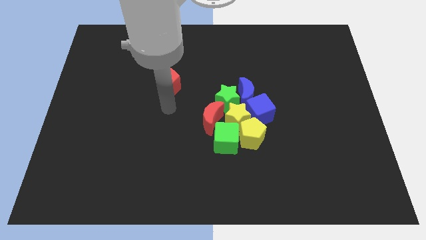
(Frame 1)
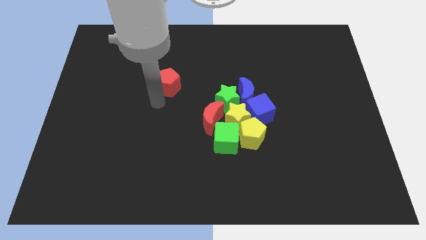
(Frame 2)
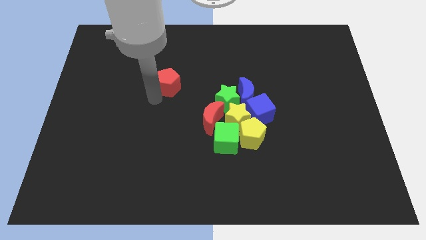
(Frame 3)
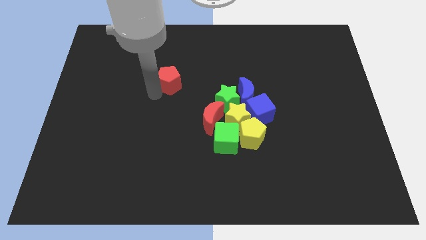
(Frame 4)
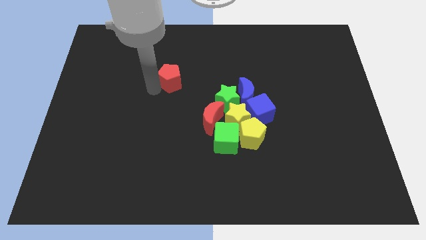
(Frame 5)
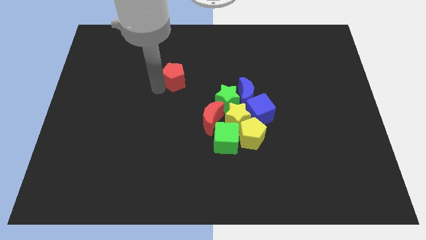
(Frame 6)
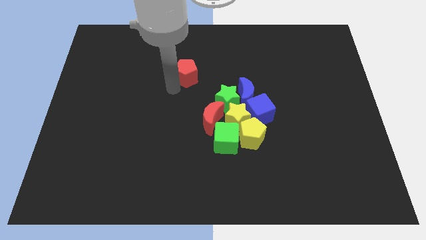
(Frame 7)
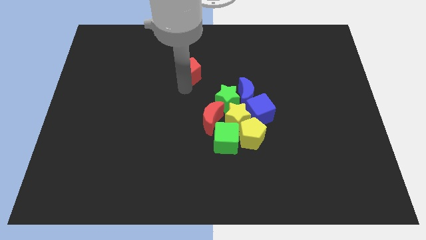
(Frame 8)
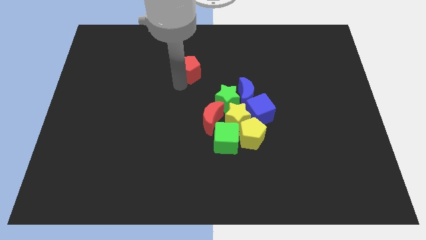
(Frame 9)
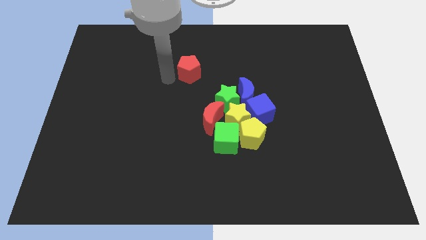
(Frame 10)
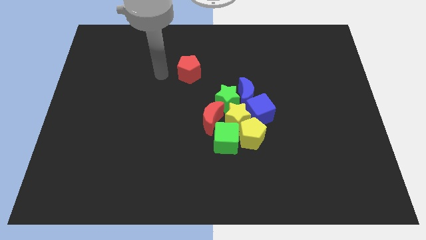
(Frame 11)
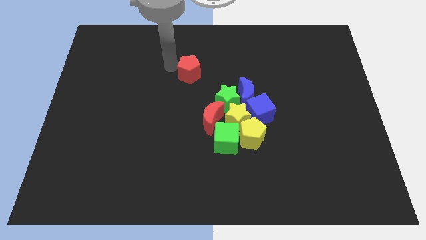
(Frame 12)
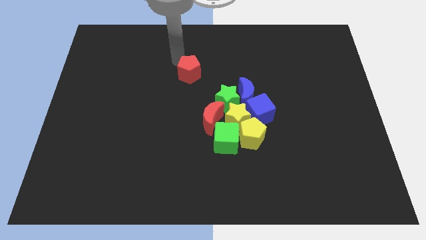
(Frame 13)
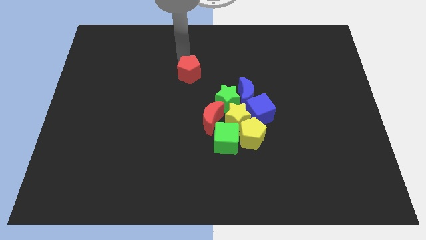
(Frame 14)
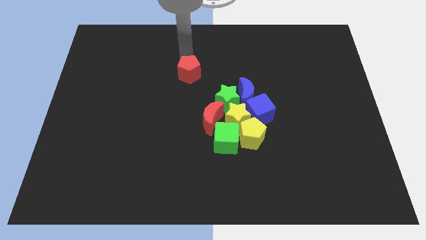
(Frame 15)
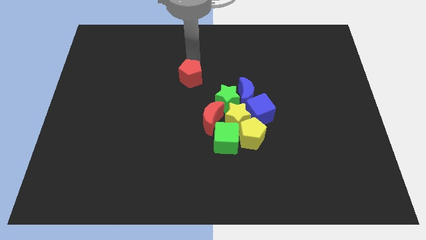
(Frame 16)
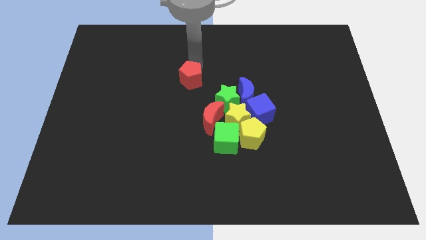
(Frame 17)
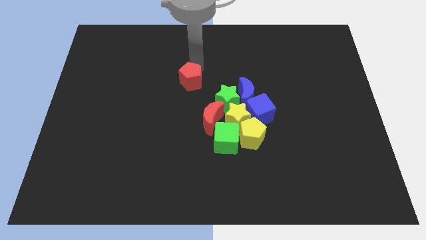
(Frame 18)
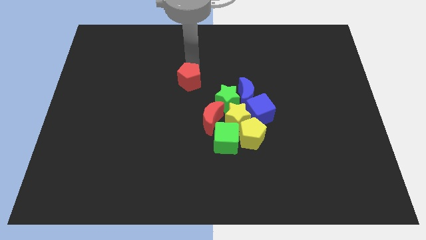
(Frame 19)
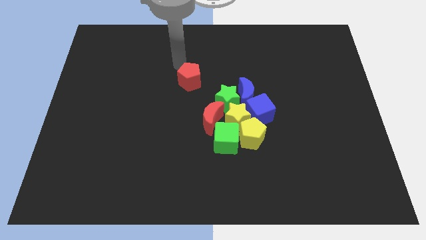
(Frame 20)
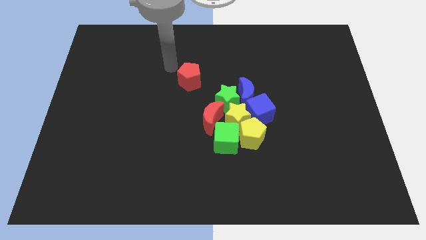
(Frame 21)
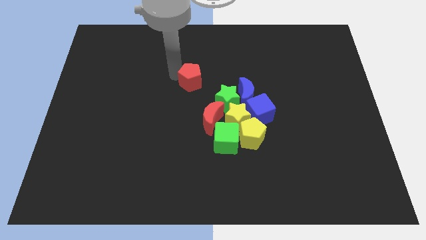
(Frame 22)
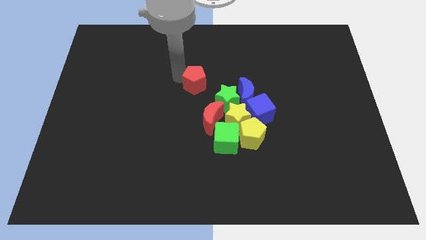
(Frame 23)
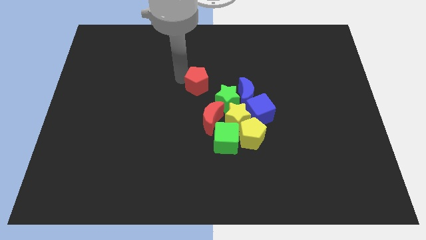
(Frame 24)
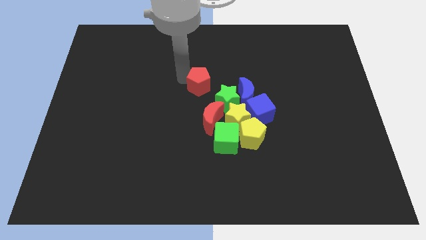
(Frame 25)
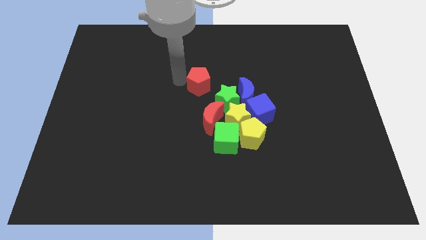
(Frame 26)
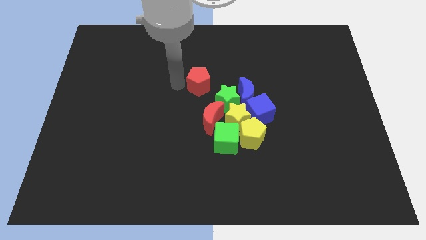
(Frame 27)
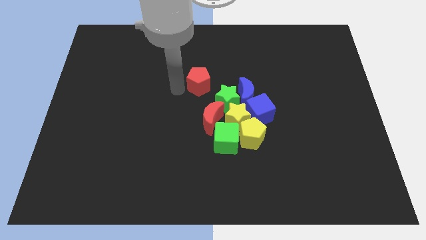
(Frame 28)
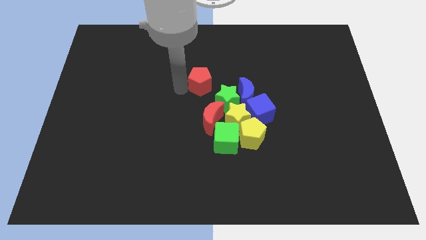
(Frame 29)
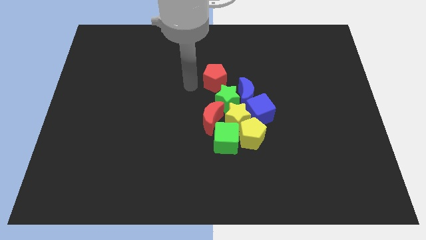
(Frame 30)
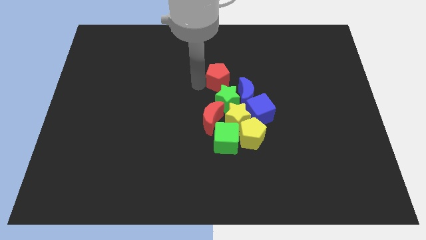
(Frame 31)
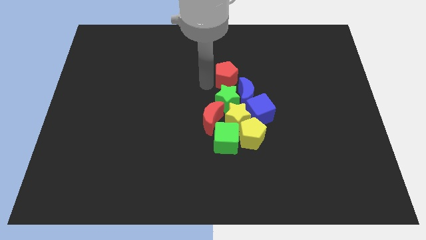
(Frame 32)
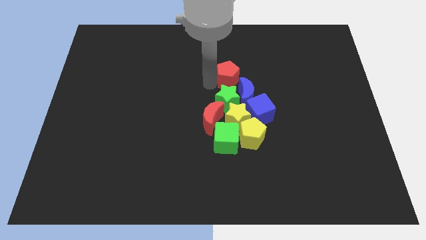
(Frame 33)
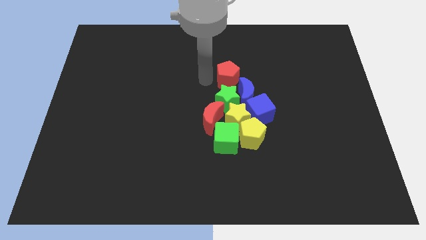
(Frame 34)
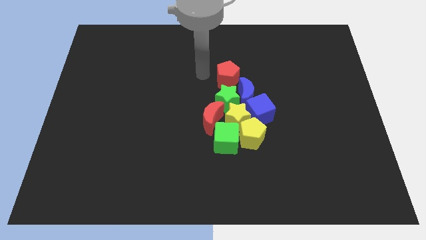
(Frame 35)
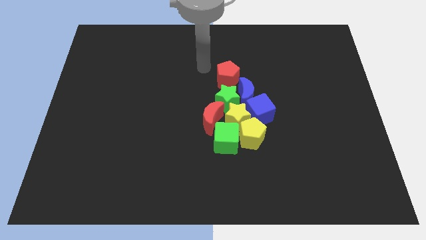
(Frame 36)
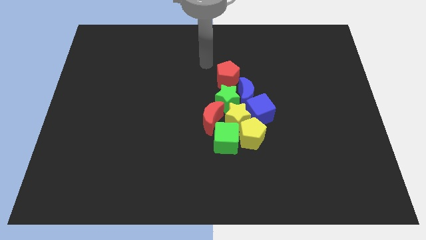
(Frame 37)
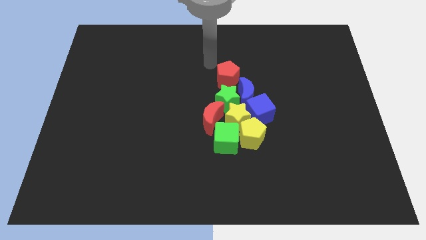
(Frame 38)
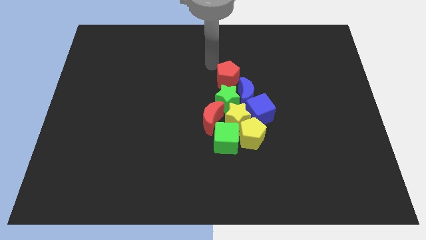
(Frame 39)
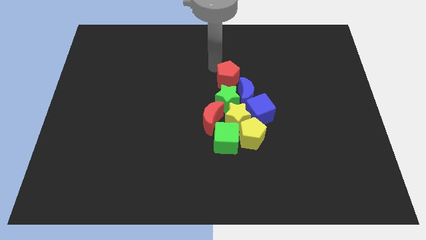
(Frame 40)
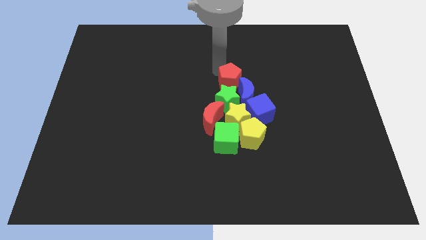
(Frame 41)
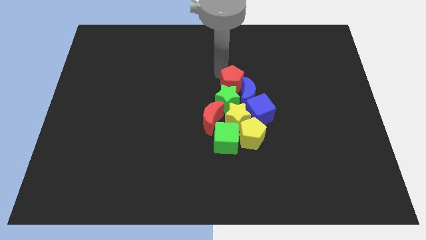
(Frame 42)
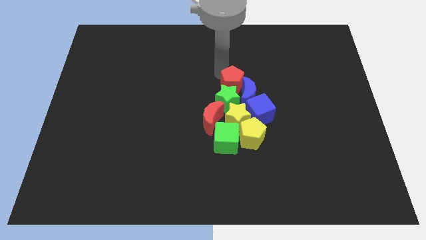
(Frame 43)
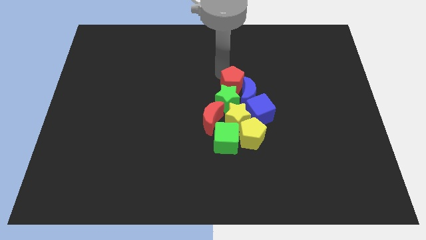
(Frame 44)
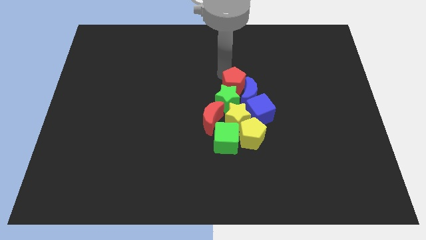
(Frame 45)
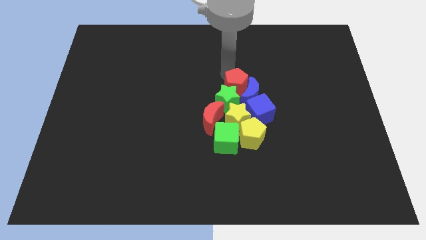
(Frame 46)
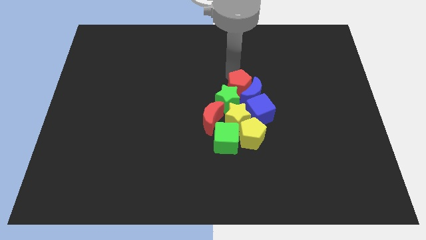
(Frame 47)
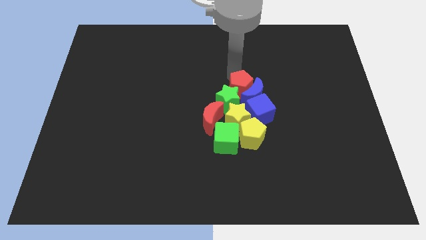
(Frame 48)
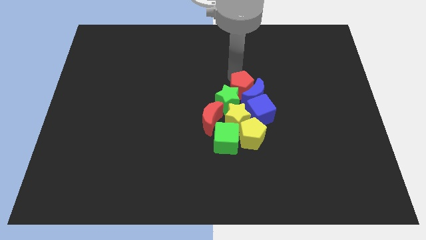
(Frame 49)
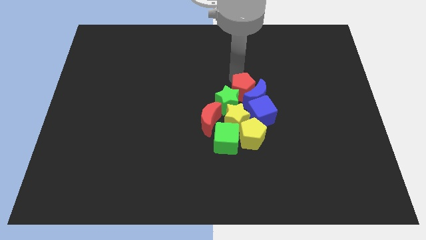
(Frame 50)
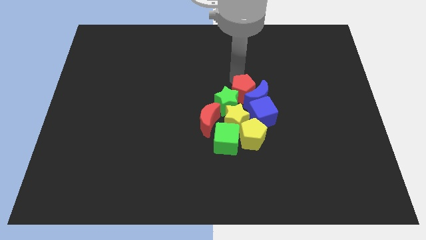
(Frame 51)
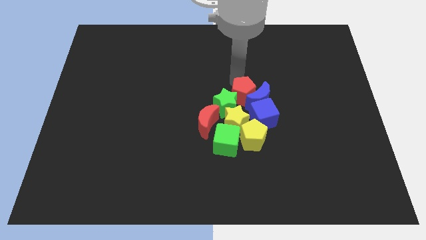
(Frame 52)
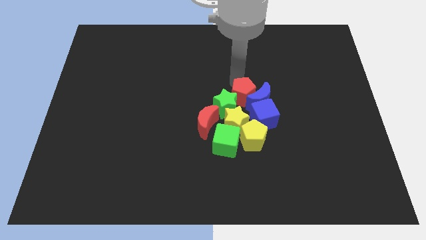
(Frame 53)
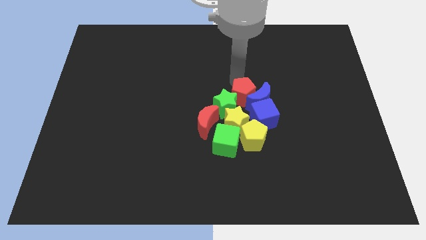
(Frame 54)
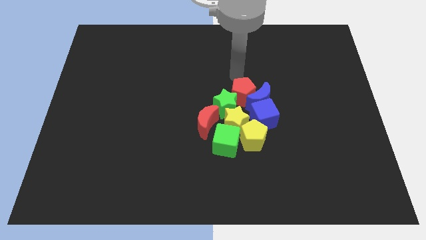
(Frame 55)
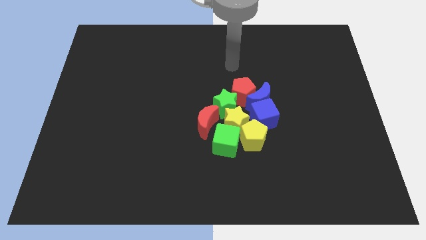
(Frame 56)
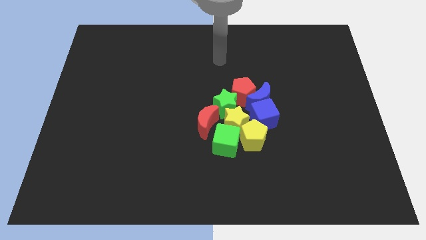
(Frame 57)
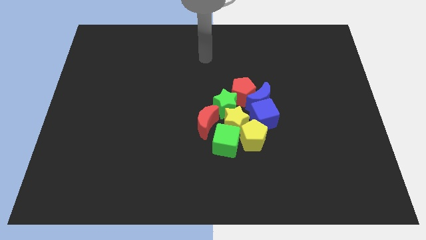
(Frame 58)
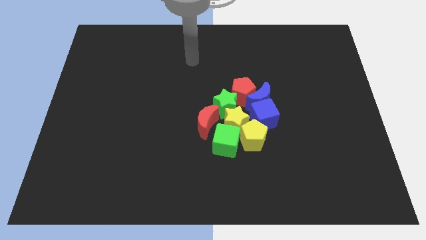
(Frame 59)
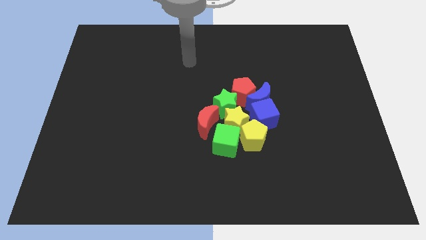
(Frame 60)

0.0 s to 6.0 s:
push the red pentagon into the group of blocks

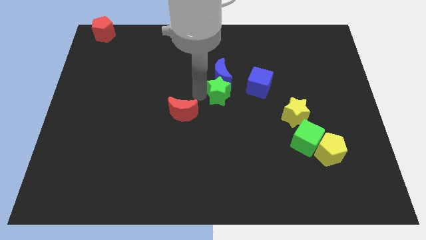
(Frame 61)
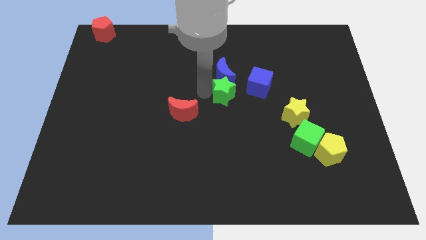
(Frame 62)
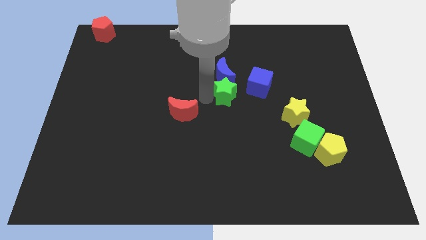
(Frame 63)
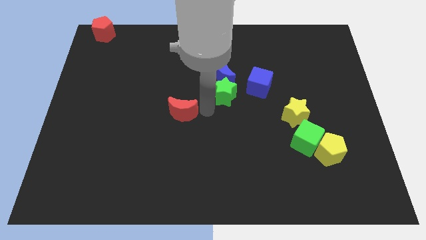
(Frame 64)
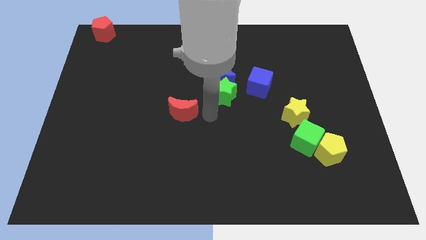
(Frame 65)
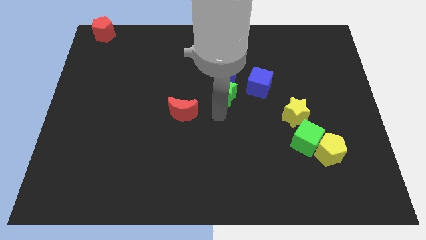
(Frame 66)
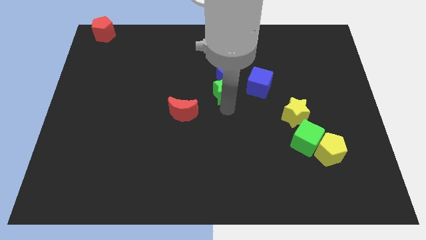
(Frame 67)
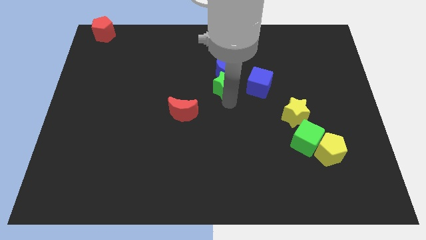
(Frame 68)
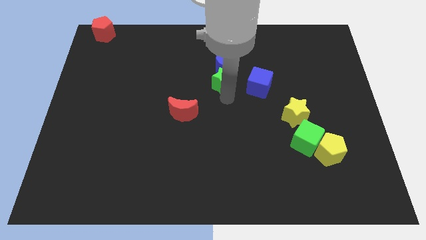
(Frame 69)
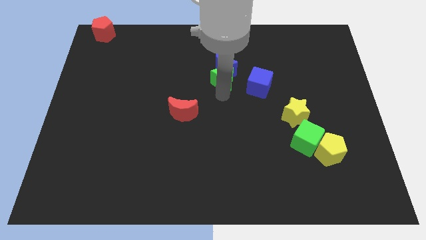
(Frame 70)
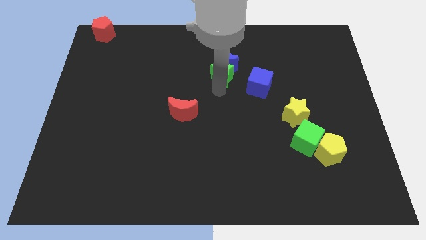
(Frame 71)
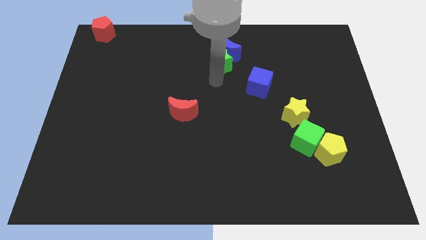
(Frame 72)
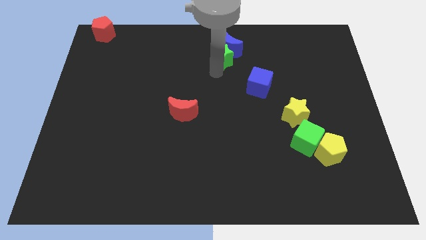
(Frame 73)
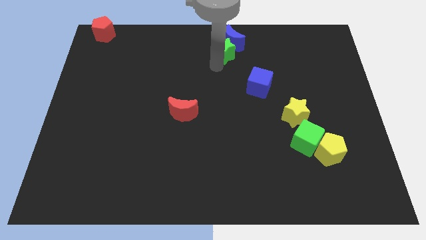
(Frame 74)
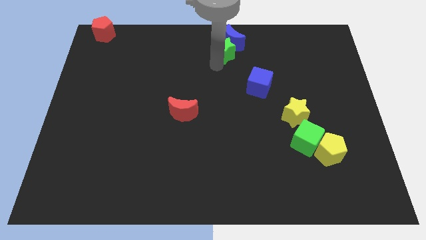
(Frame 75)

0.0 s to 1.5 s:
move the green star and the blue moon towards top

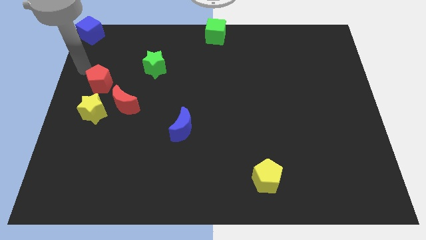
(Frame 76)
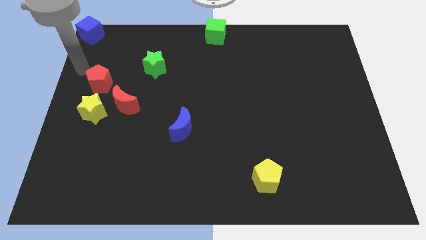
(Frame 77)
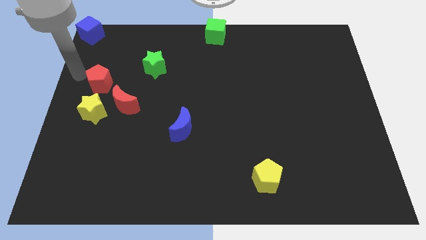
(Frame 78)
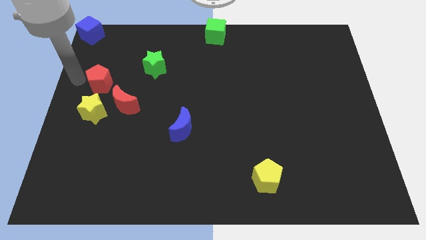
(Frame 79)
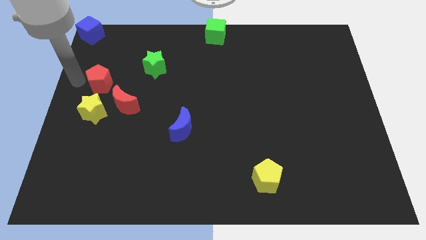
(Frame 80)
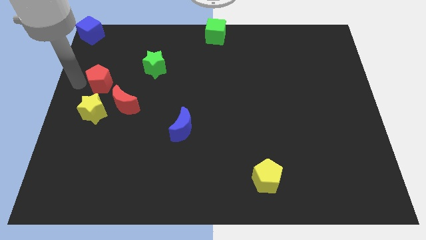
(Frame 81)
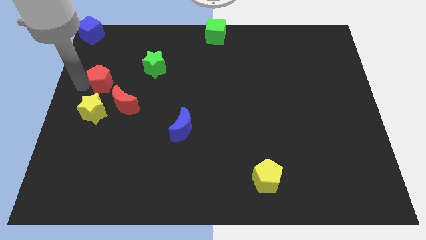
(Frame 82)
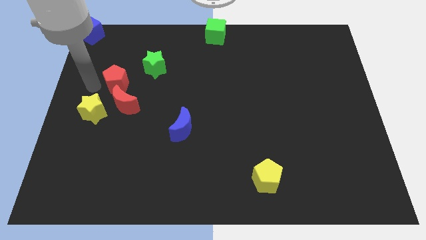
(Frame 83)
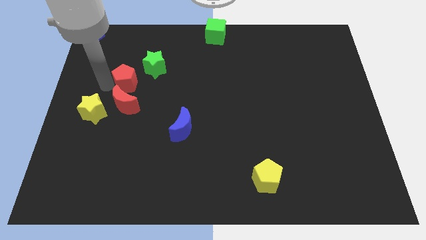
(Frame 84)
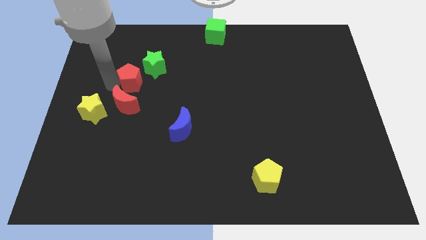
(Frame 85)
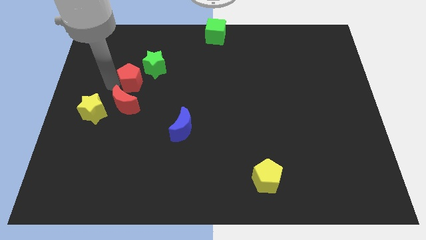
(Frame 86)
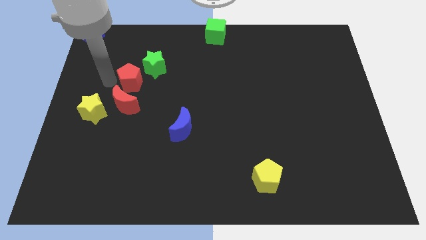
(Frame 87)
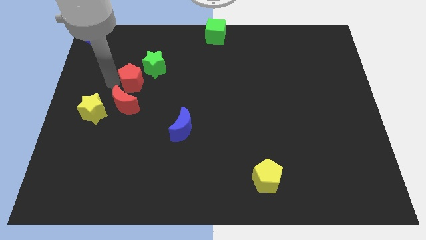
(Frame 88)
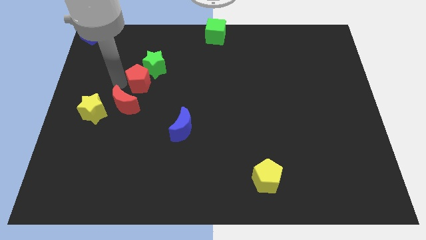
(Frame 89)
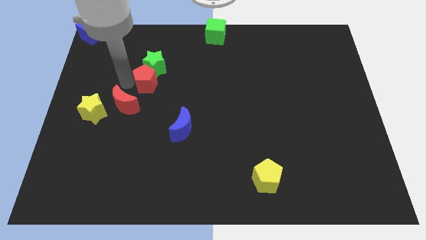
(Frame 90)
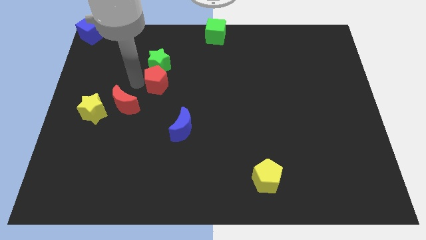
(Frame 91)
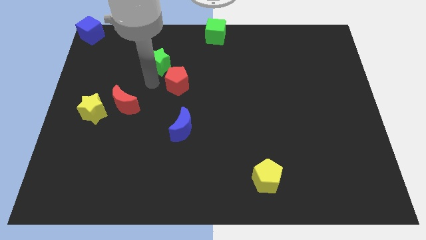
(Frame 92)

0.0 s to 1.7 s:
place the red pentagon below the green star
